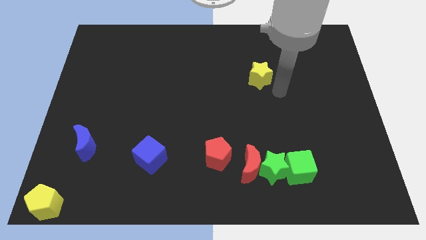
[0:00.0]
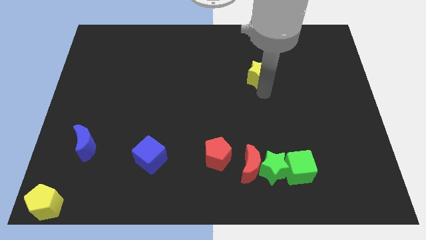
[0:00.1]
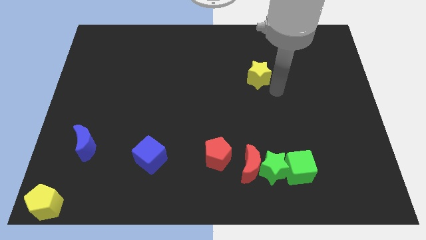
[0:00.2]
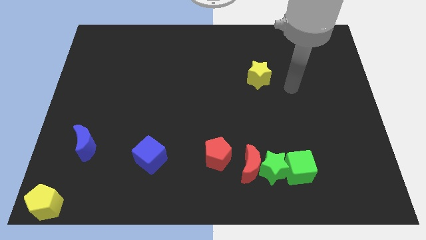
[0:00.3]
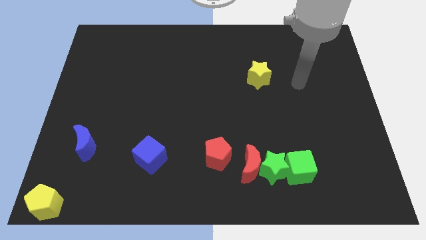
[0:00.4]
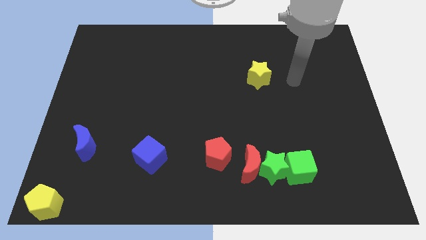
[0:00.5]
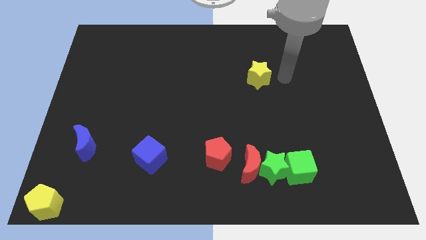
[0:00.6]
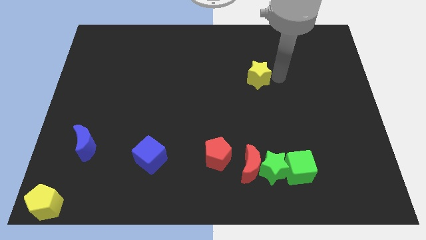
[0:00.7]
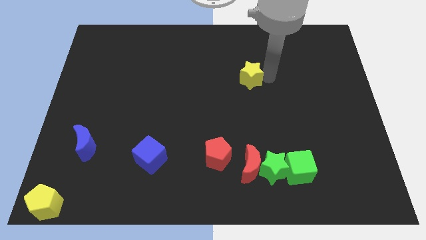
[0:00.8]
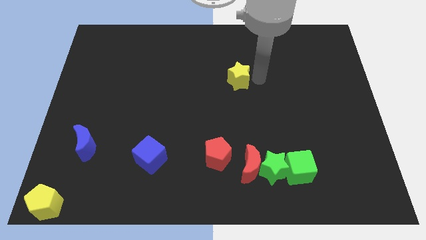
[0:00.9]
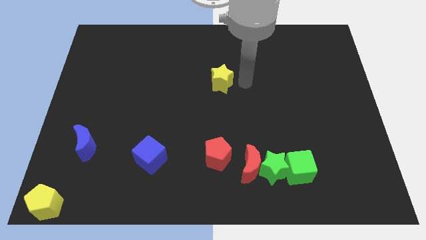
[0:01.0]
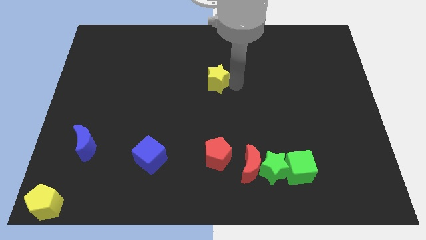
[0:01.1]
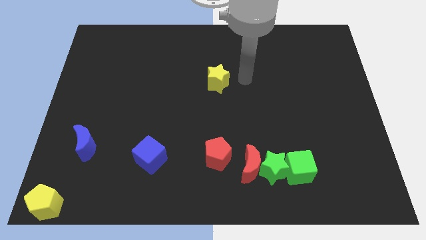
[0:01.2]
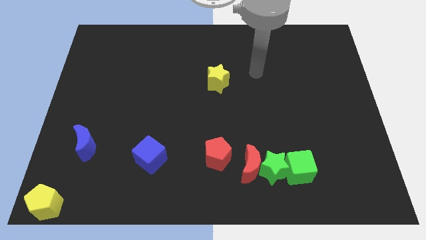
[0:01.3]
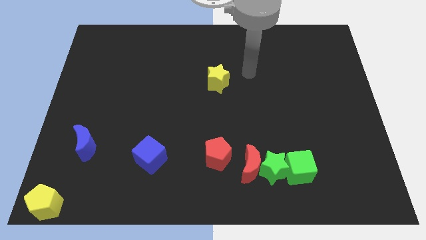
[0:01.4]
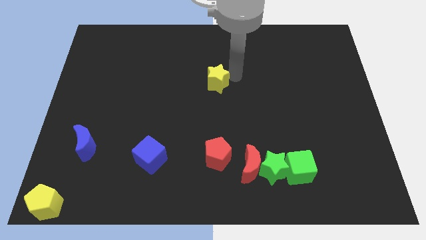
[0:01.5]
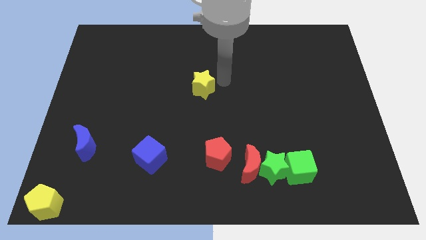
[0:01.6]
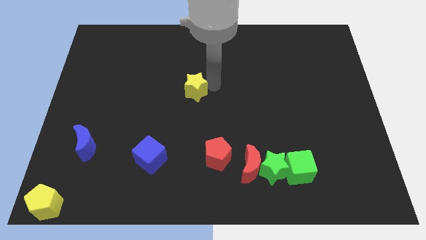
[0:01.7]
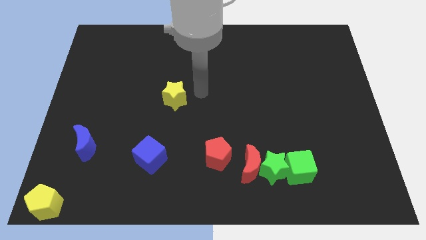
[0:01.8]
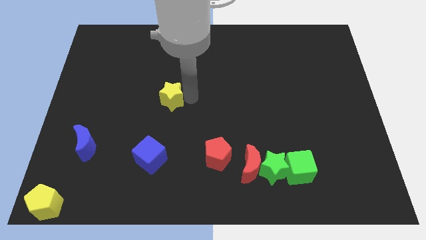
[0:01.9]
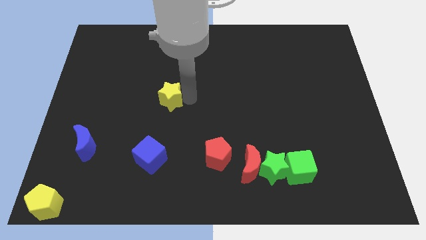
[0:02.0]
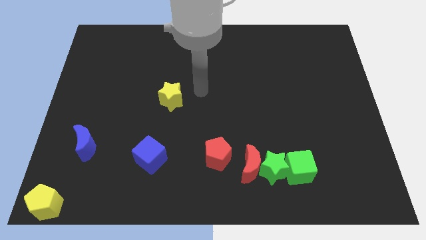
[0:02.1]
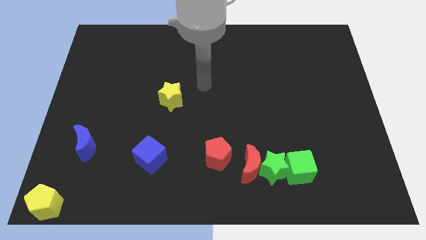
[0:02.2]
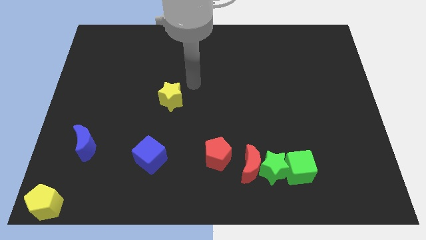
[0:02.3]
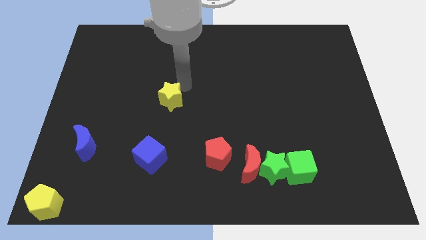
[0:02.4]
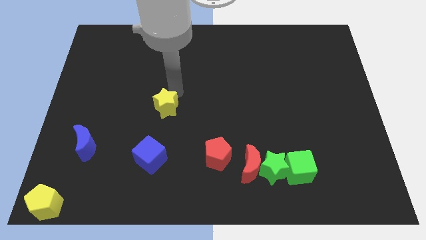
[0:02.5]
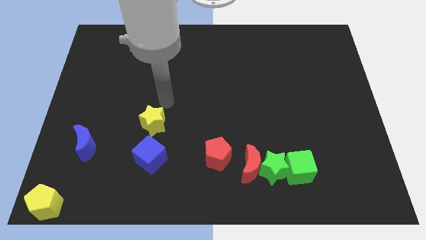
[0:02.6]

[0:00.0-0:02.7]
put the yellow star above the blue cube

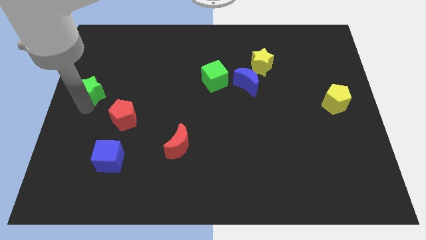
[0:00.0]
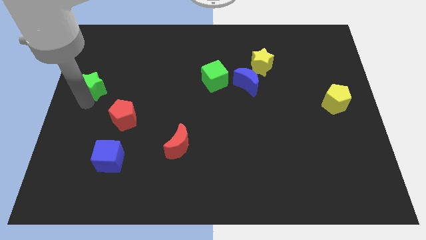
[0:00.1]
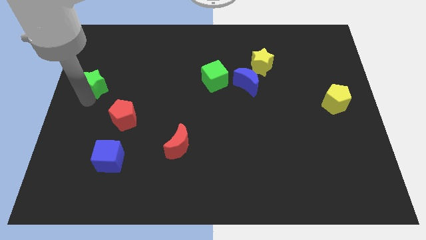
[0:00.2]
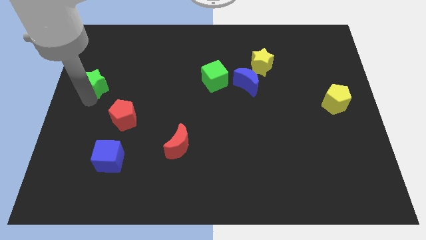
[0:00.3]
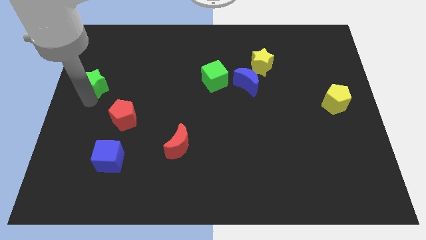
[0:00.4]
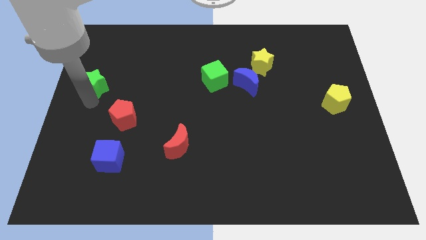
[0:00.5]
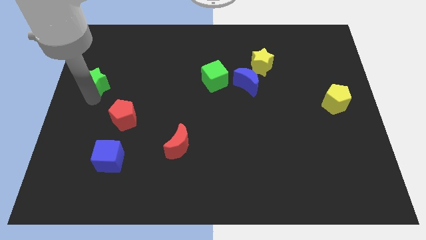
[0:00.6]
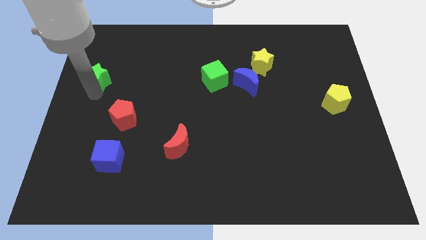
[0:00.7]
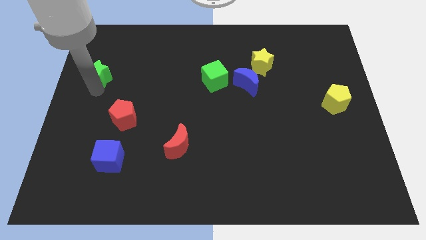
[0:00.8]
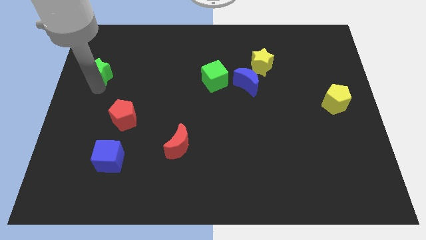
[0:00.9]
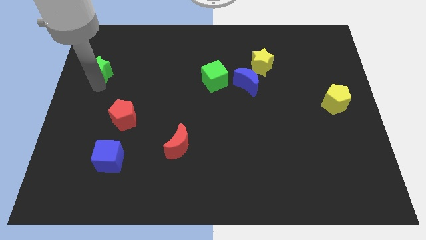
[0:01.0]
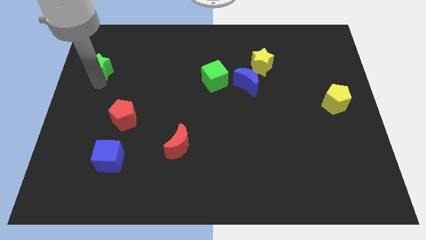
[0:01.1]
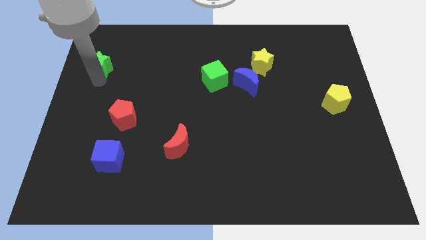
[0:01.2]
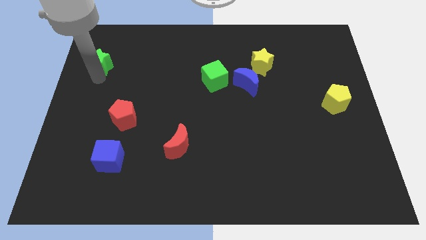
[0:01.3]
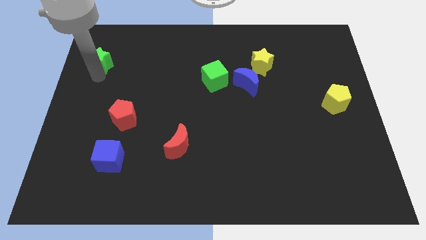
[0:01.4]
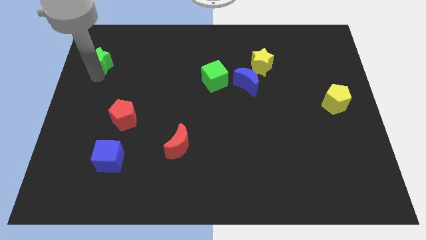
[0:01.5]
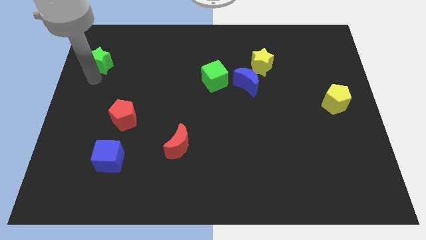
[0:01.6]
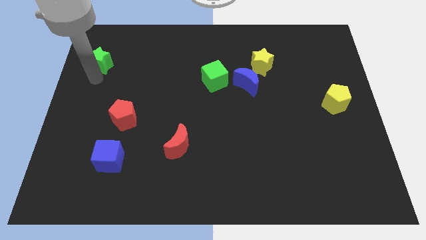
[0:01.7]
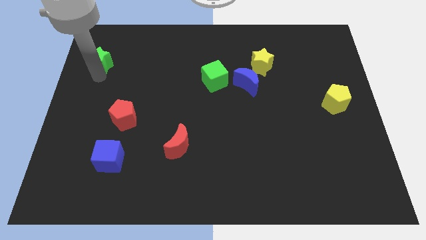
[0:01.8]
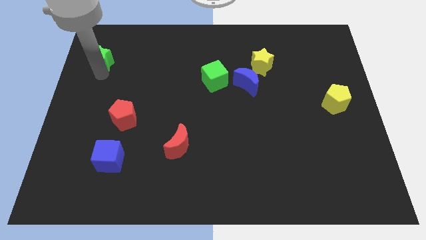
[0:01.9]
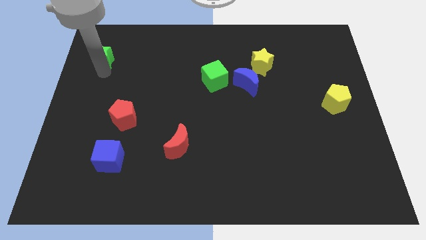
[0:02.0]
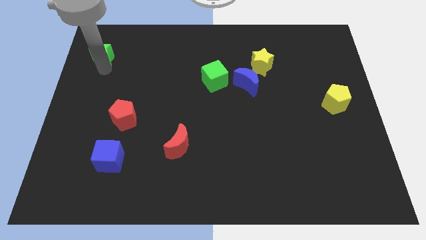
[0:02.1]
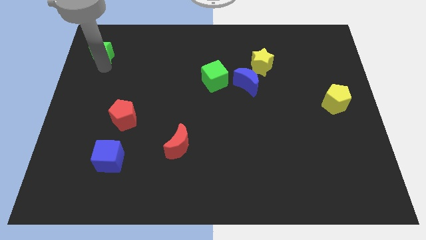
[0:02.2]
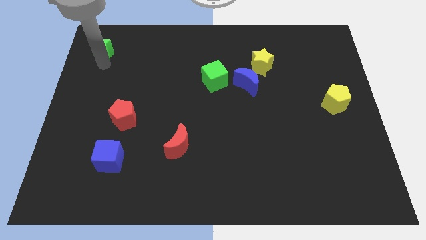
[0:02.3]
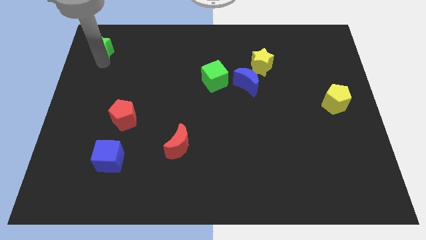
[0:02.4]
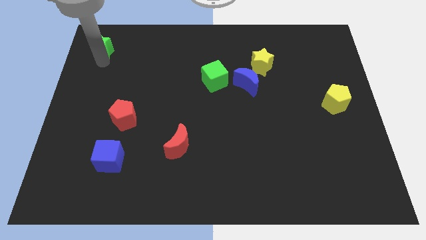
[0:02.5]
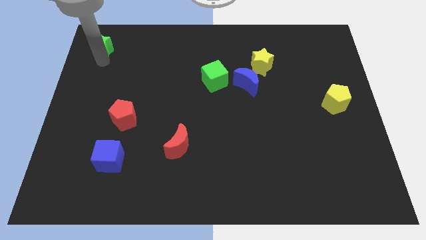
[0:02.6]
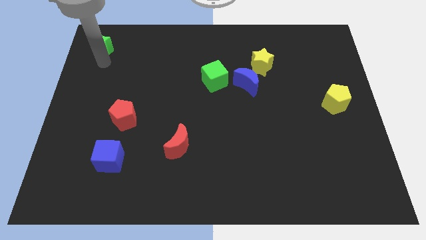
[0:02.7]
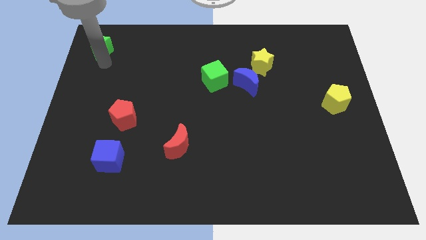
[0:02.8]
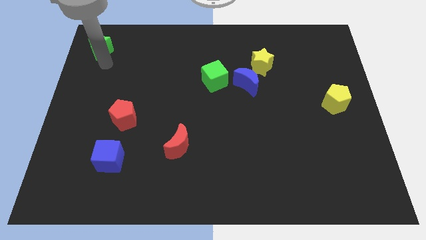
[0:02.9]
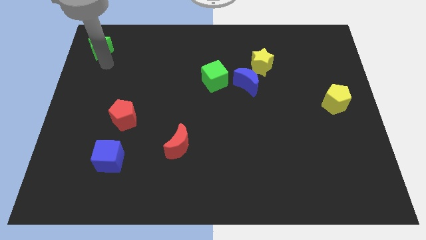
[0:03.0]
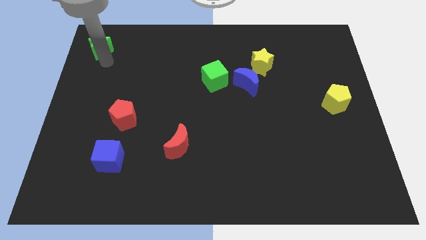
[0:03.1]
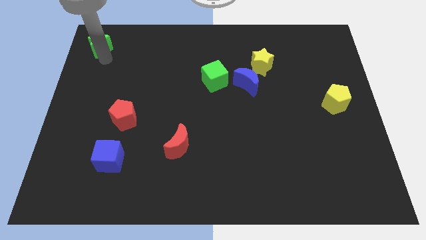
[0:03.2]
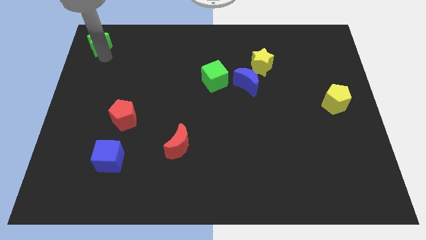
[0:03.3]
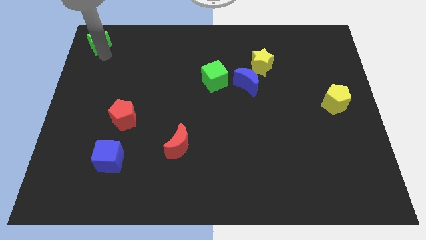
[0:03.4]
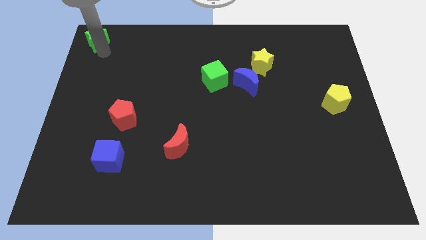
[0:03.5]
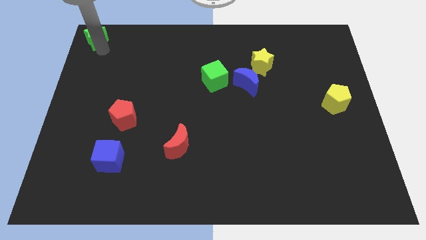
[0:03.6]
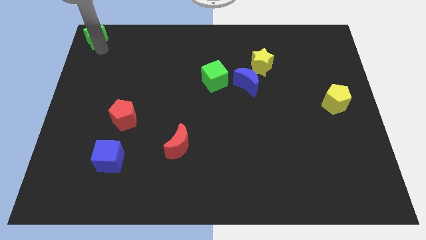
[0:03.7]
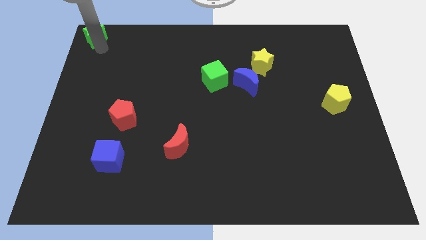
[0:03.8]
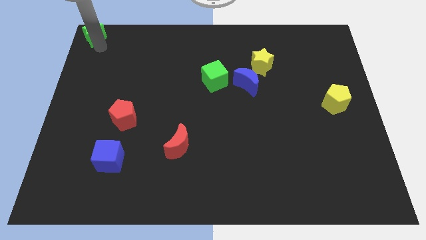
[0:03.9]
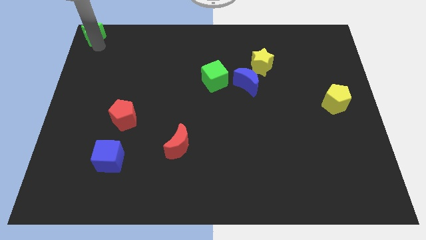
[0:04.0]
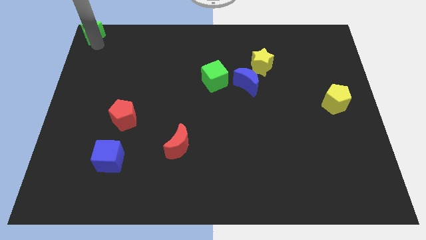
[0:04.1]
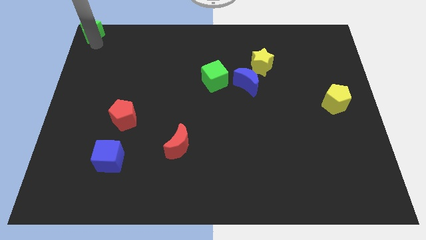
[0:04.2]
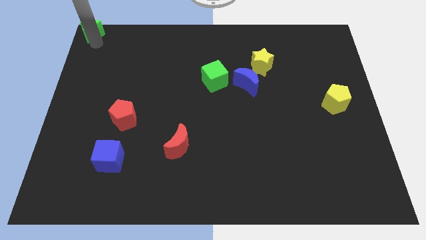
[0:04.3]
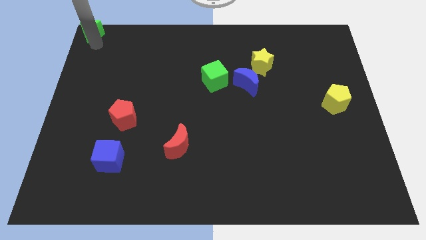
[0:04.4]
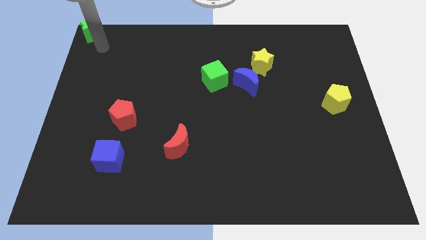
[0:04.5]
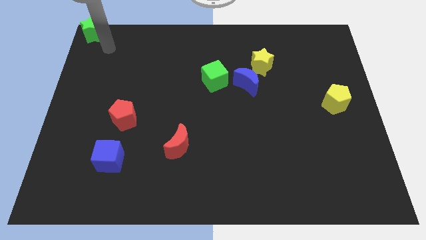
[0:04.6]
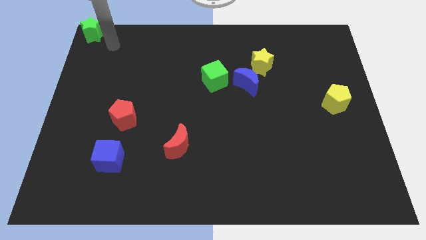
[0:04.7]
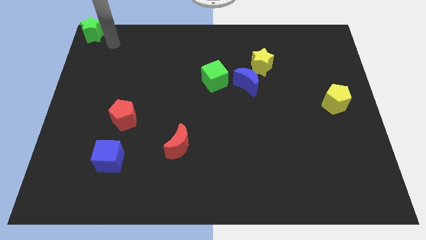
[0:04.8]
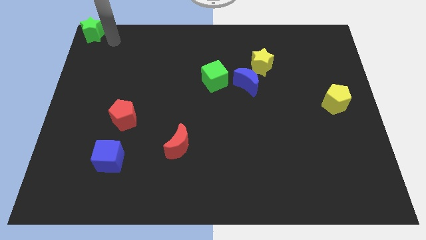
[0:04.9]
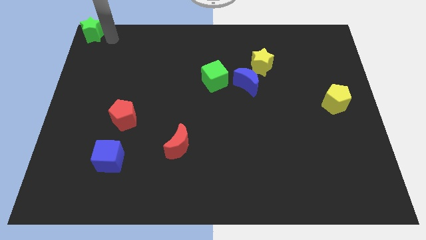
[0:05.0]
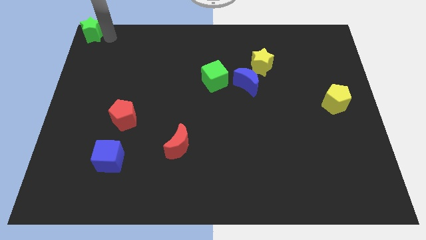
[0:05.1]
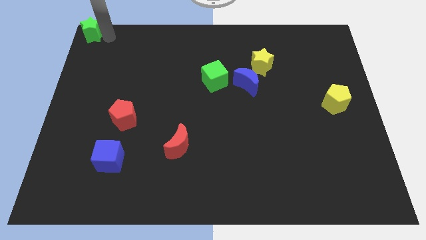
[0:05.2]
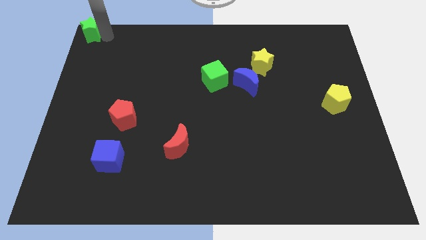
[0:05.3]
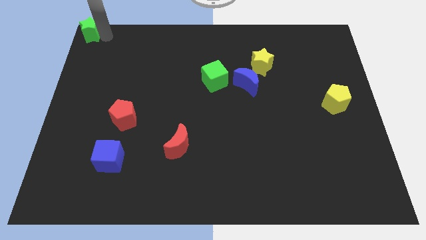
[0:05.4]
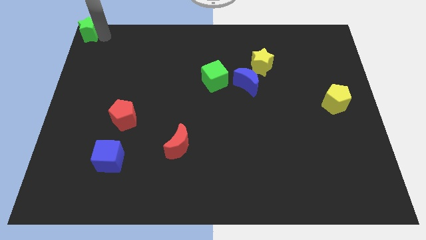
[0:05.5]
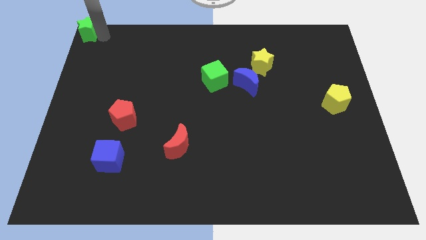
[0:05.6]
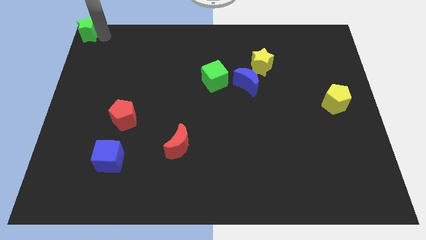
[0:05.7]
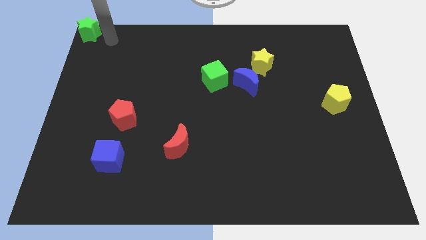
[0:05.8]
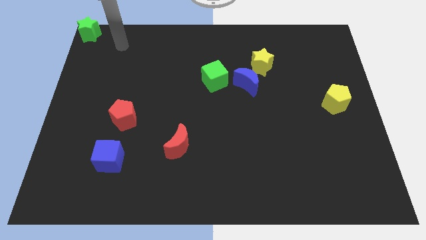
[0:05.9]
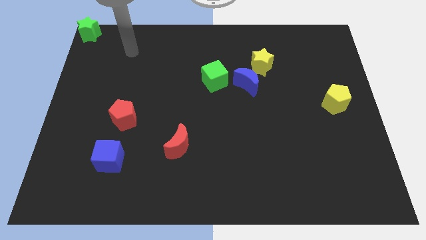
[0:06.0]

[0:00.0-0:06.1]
move the green star to the top left corner

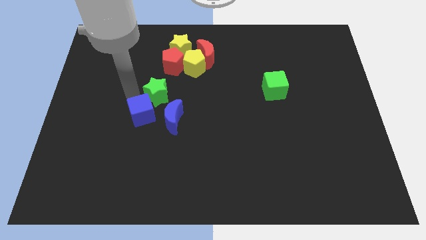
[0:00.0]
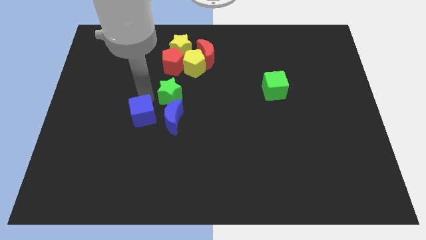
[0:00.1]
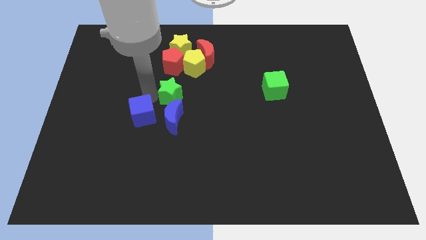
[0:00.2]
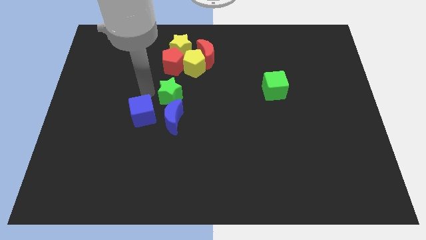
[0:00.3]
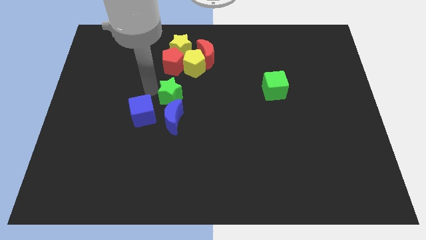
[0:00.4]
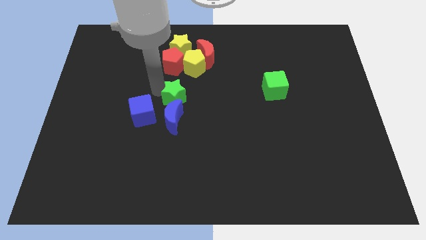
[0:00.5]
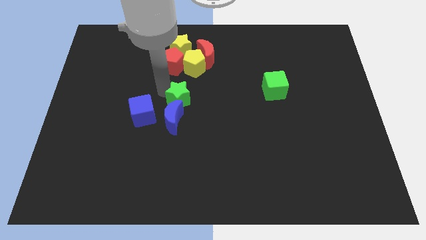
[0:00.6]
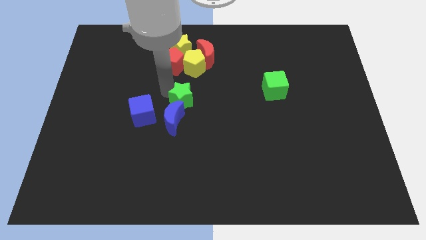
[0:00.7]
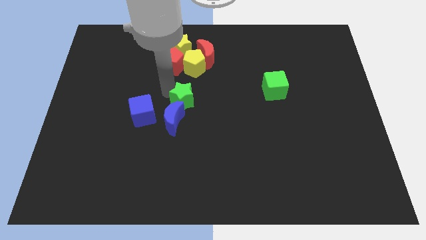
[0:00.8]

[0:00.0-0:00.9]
push the green star to the top of the blue crescent
